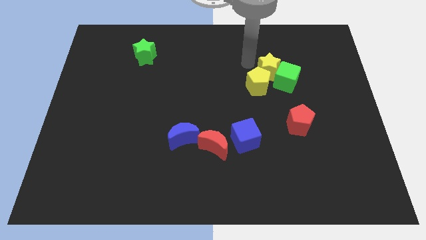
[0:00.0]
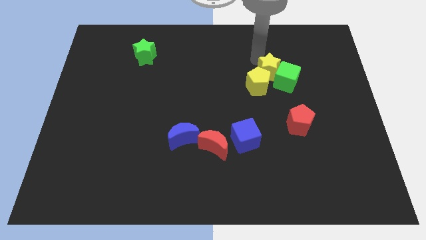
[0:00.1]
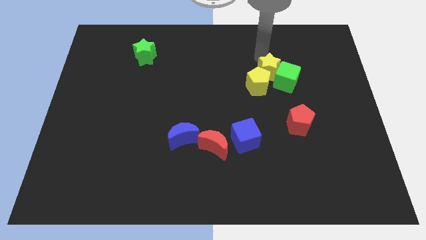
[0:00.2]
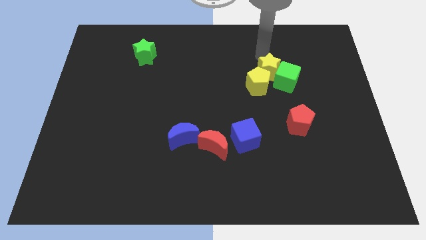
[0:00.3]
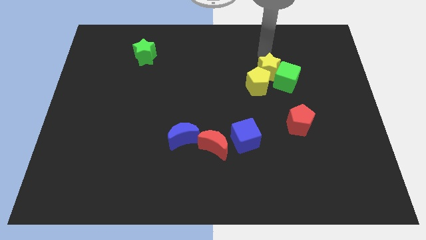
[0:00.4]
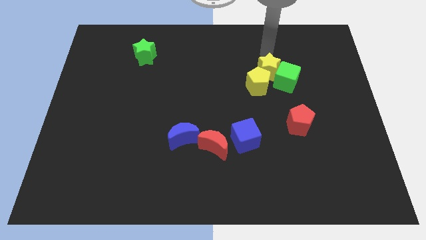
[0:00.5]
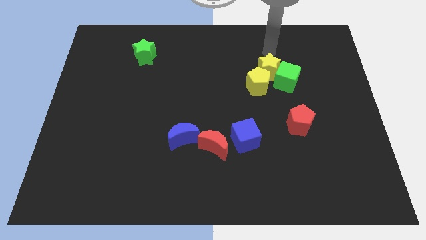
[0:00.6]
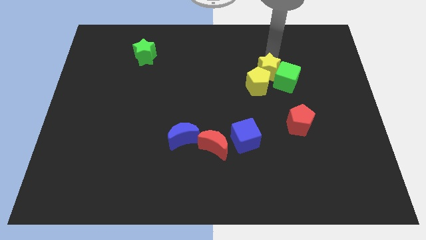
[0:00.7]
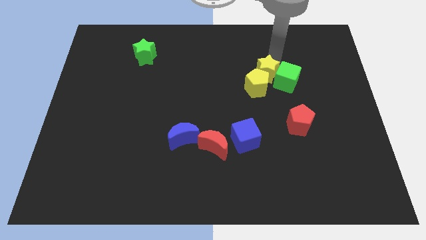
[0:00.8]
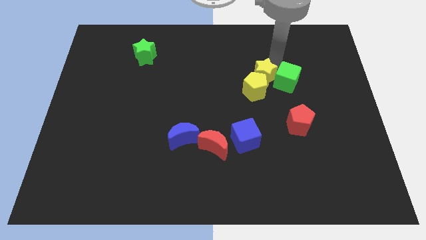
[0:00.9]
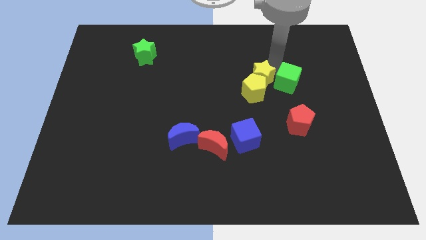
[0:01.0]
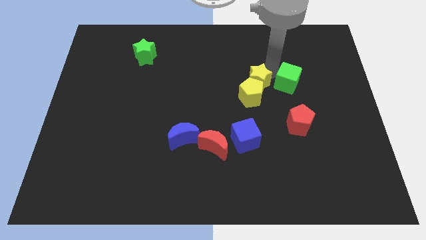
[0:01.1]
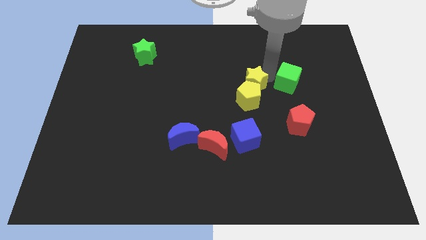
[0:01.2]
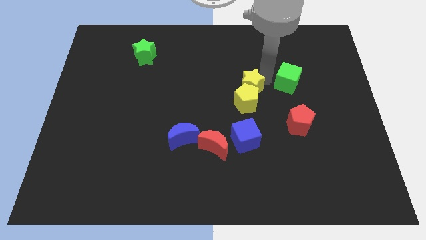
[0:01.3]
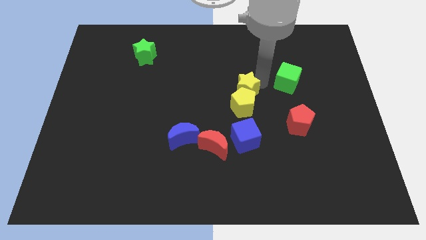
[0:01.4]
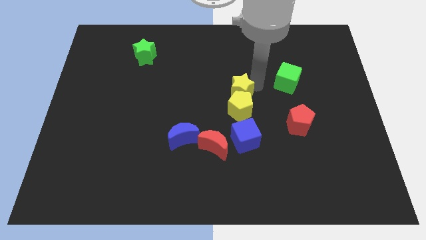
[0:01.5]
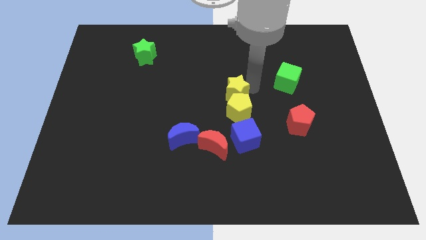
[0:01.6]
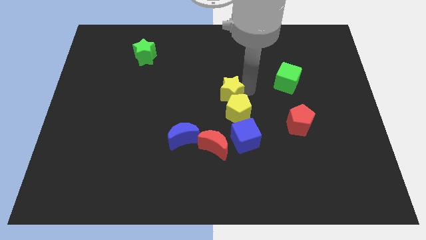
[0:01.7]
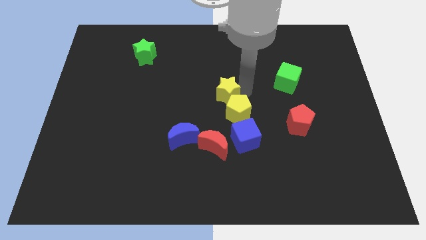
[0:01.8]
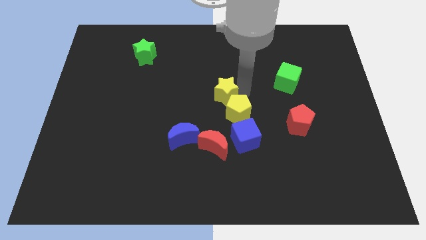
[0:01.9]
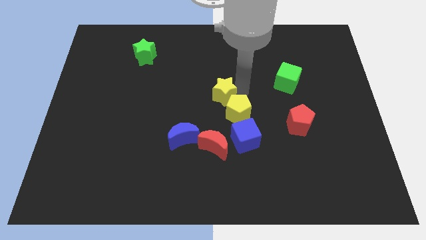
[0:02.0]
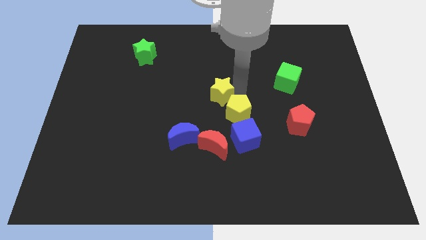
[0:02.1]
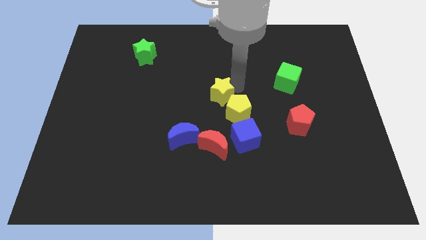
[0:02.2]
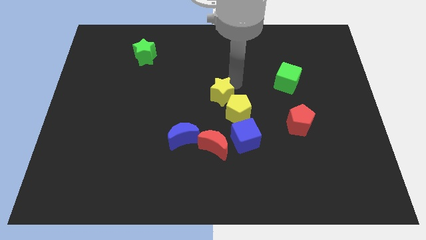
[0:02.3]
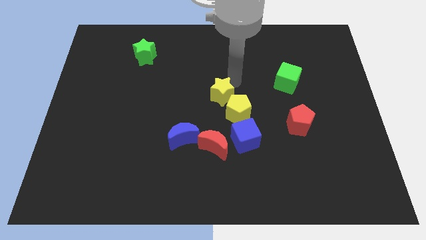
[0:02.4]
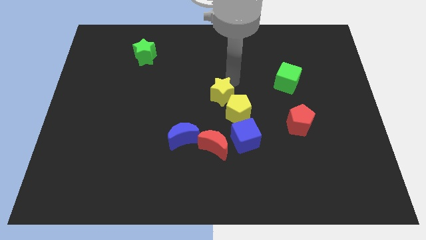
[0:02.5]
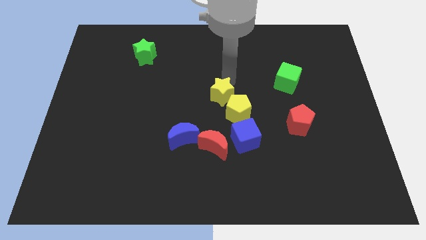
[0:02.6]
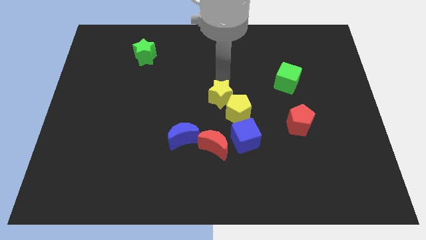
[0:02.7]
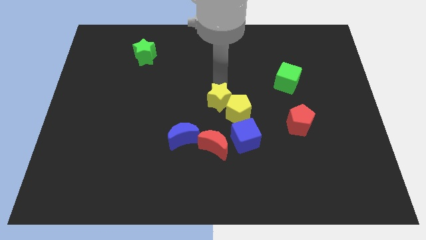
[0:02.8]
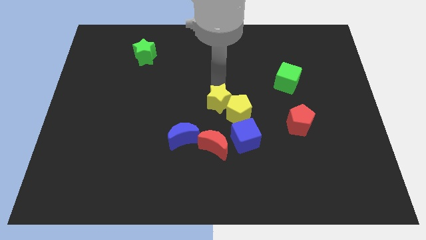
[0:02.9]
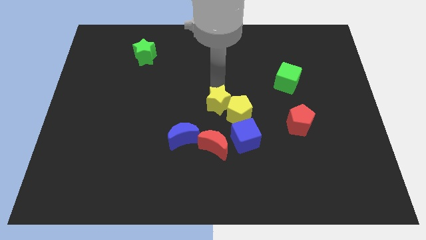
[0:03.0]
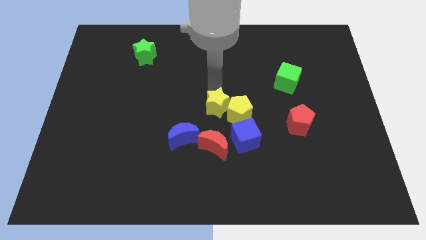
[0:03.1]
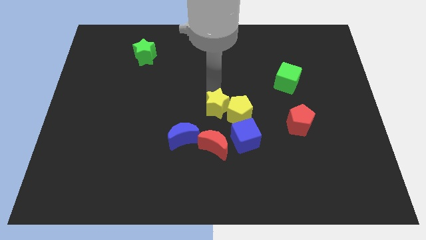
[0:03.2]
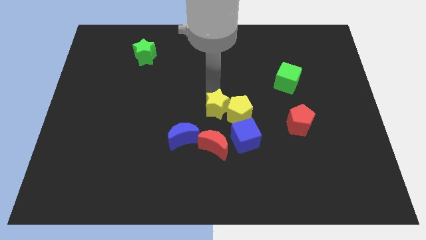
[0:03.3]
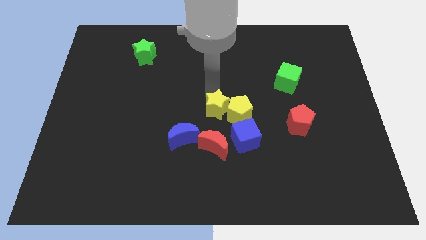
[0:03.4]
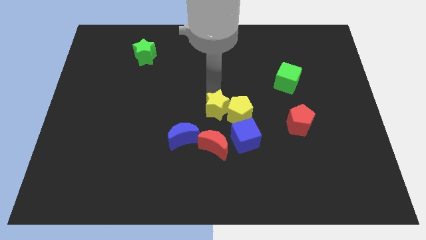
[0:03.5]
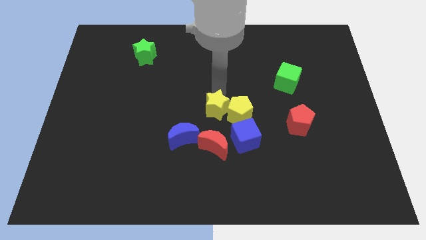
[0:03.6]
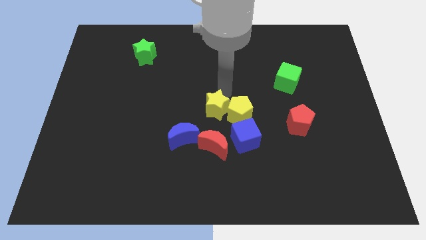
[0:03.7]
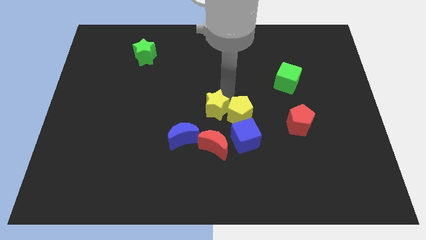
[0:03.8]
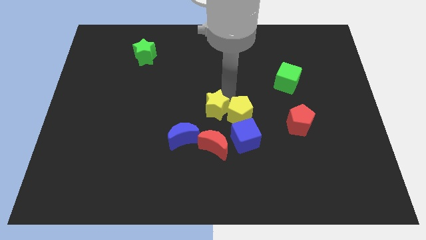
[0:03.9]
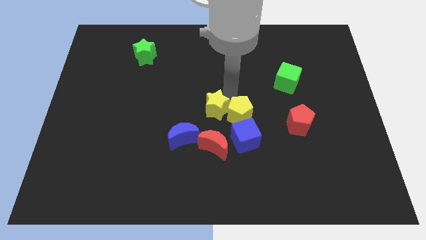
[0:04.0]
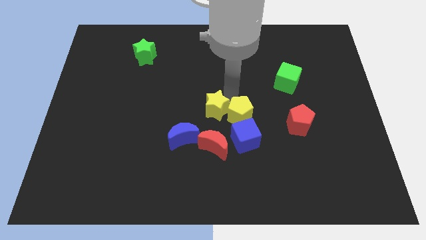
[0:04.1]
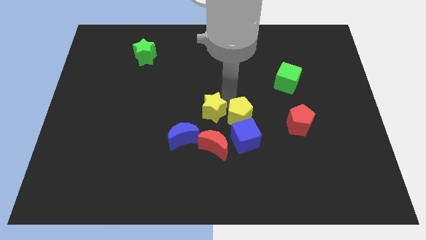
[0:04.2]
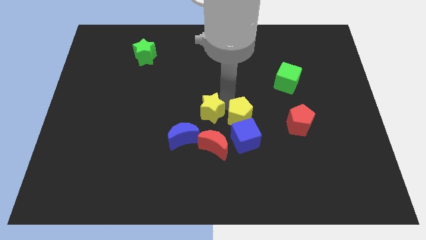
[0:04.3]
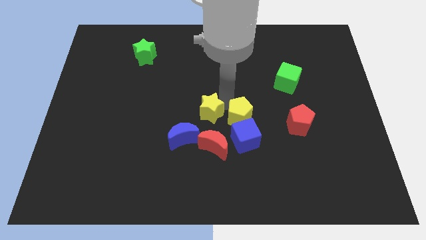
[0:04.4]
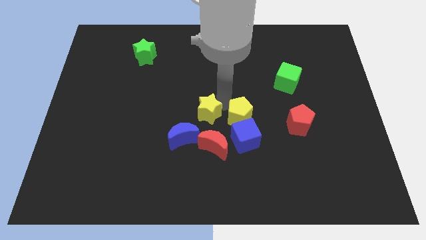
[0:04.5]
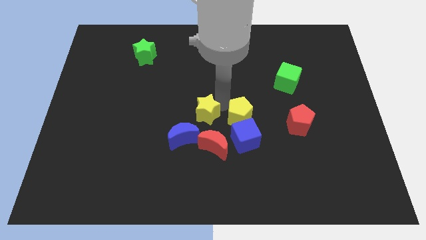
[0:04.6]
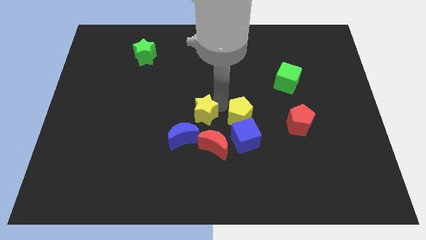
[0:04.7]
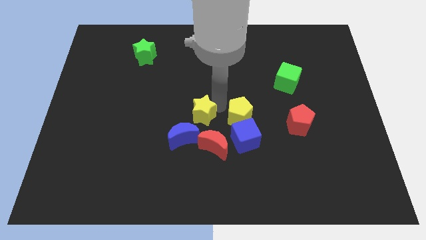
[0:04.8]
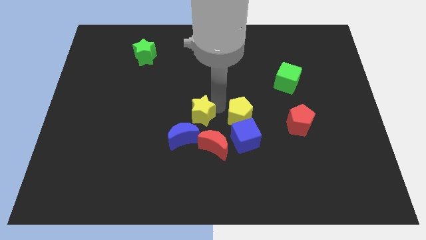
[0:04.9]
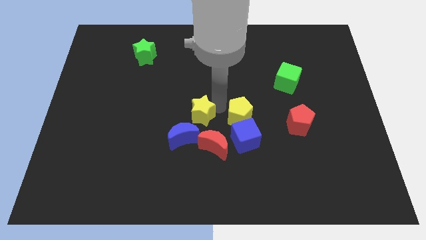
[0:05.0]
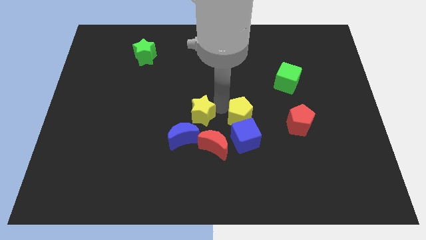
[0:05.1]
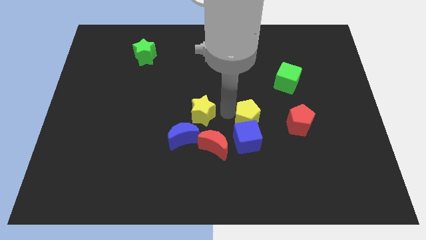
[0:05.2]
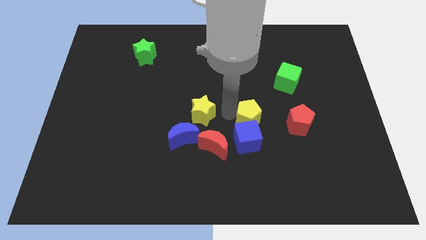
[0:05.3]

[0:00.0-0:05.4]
push the yellow star to the centre of the board

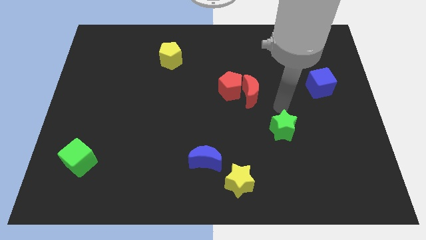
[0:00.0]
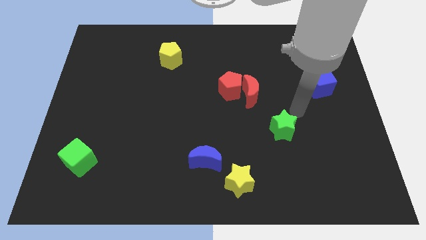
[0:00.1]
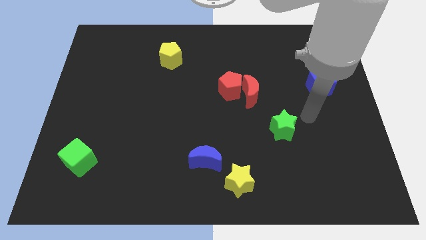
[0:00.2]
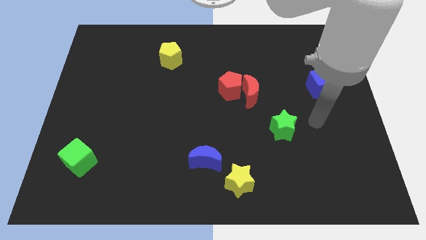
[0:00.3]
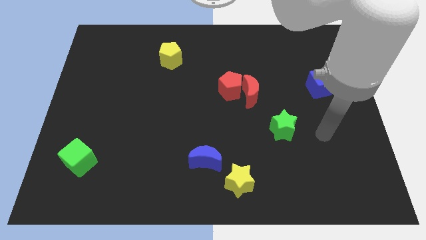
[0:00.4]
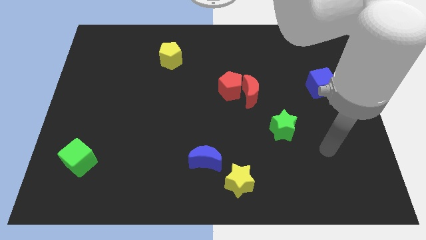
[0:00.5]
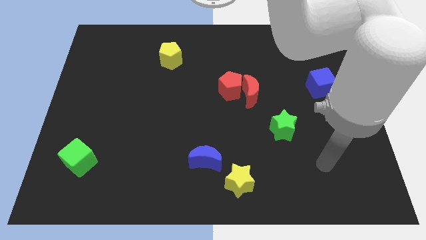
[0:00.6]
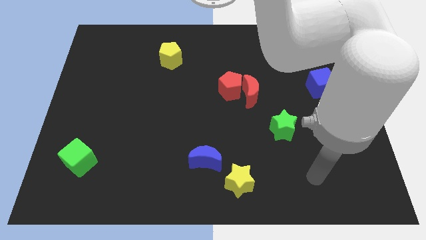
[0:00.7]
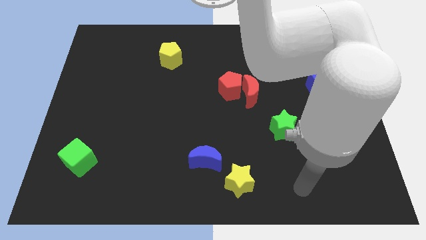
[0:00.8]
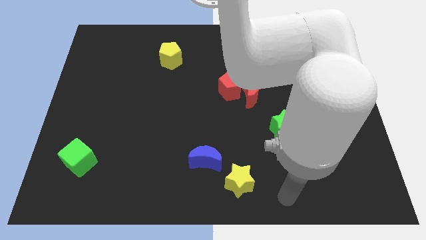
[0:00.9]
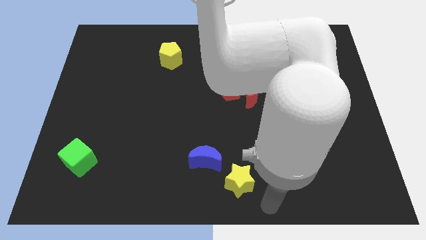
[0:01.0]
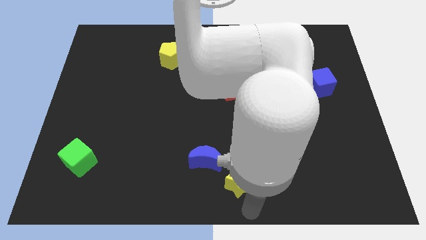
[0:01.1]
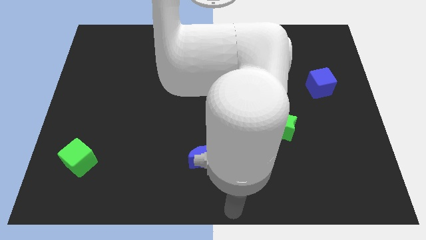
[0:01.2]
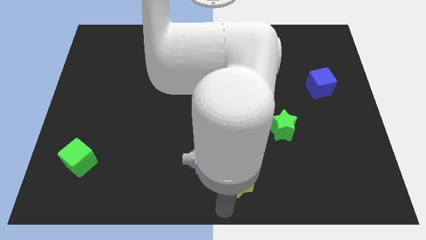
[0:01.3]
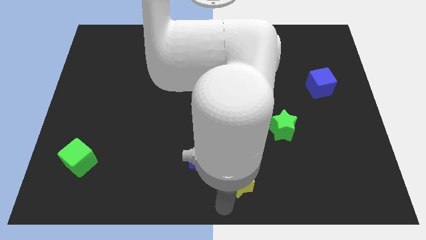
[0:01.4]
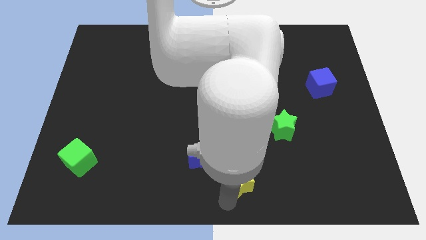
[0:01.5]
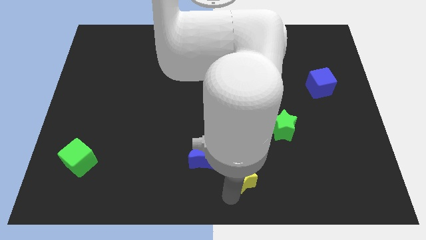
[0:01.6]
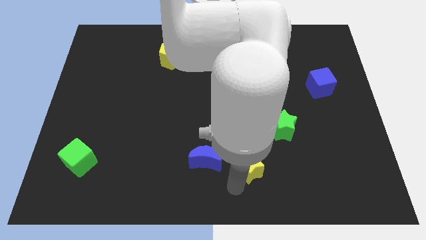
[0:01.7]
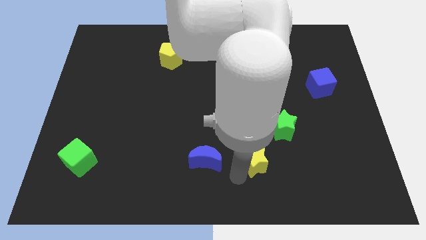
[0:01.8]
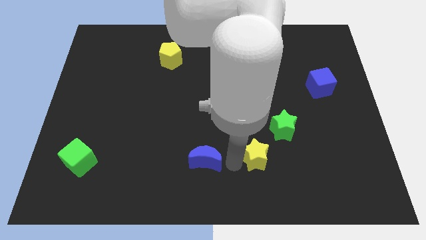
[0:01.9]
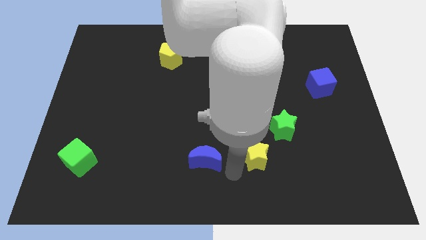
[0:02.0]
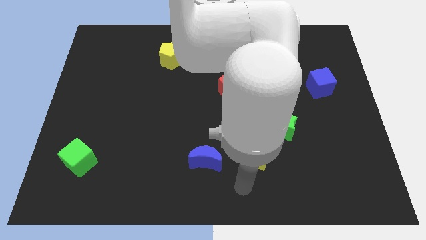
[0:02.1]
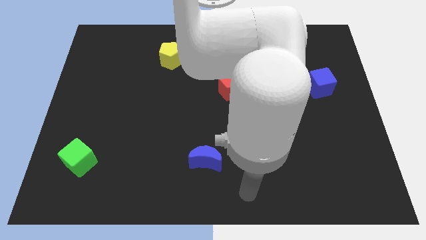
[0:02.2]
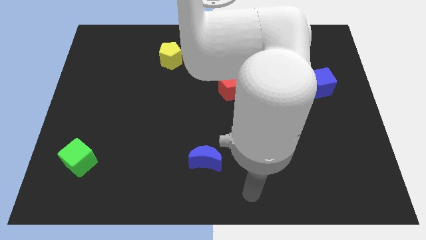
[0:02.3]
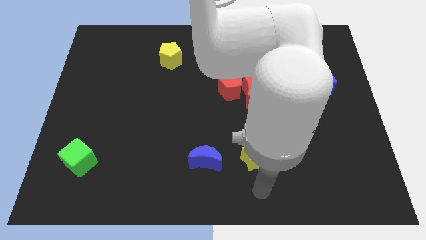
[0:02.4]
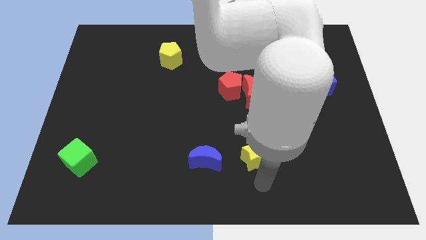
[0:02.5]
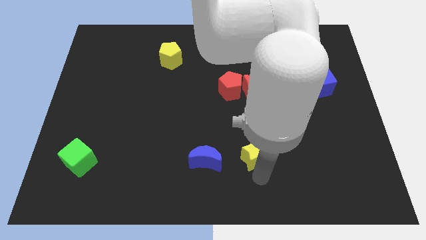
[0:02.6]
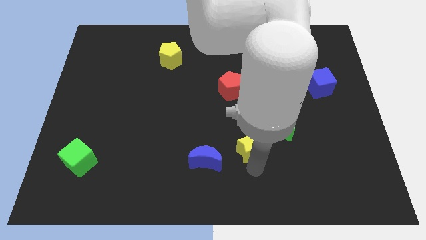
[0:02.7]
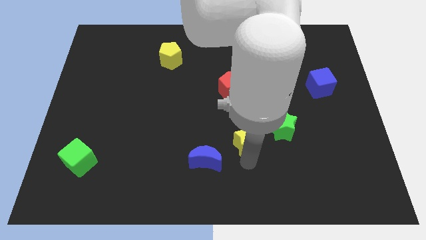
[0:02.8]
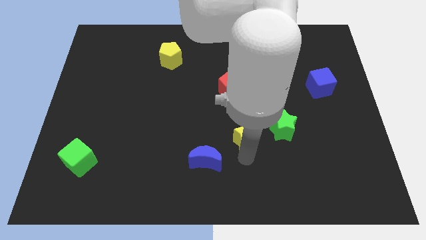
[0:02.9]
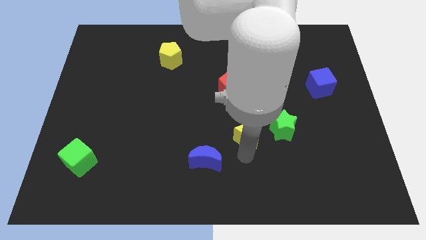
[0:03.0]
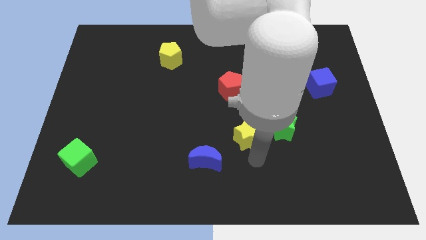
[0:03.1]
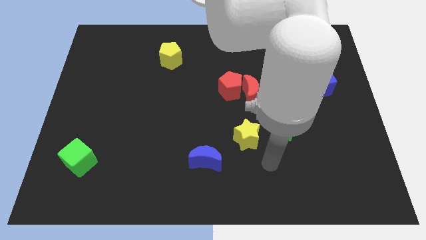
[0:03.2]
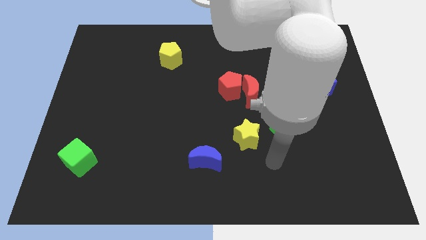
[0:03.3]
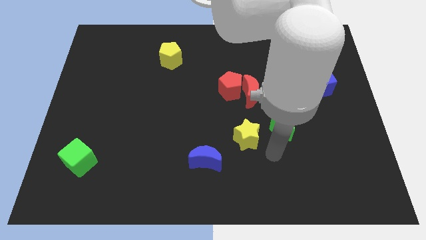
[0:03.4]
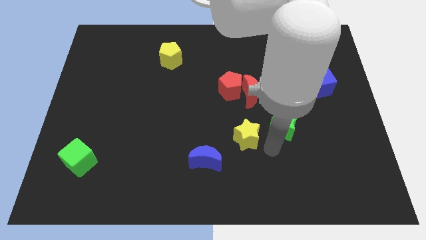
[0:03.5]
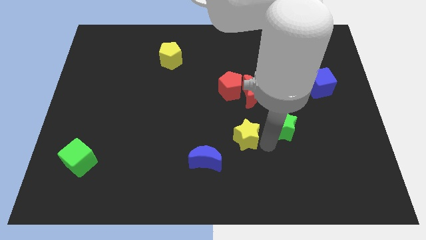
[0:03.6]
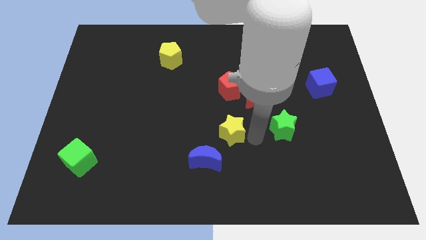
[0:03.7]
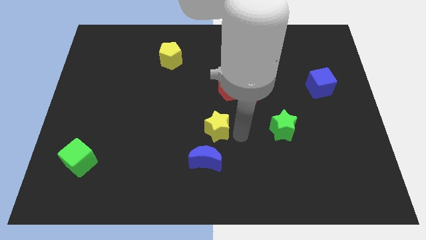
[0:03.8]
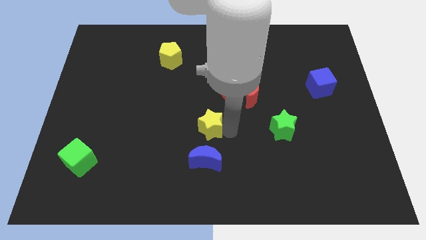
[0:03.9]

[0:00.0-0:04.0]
place the yellow star above the blue crescent
